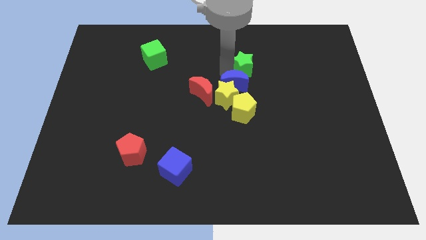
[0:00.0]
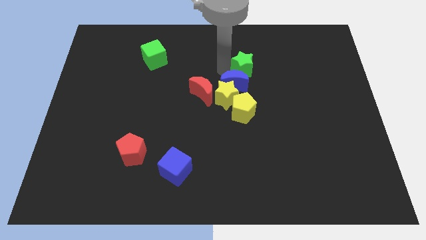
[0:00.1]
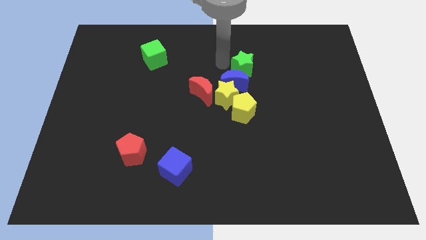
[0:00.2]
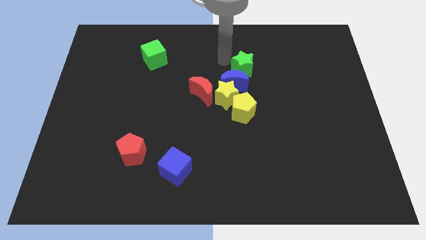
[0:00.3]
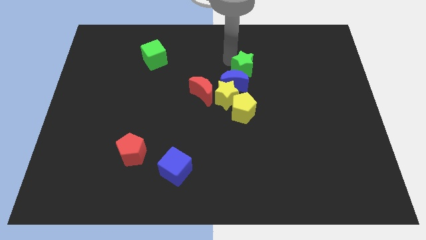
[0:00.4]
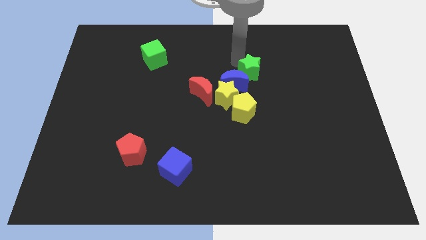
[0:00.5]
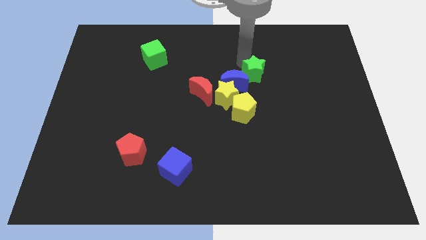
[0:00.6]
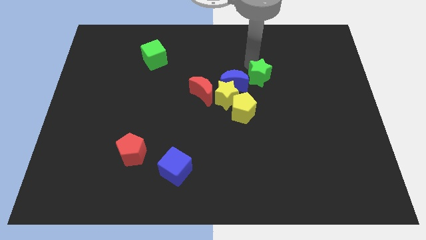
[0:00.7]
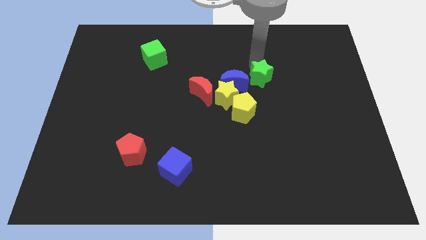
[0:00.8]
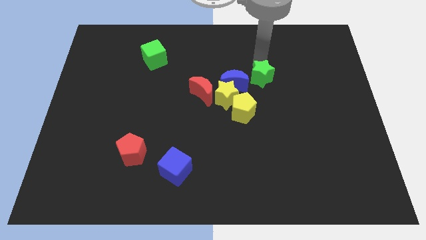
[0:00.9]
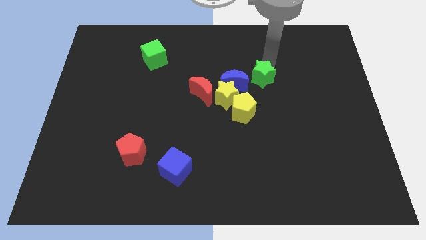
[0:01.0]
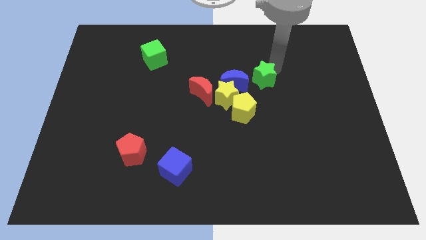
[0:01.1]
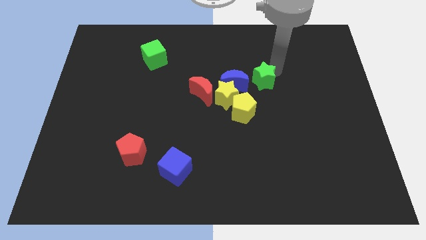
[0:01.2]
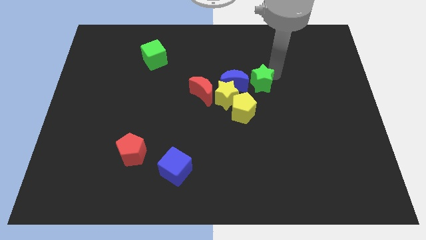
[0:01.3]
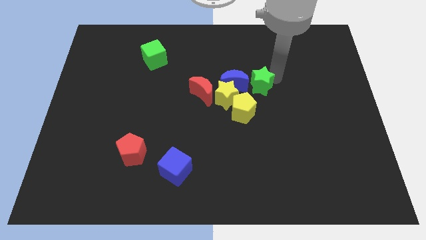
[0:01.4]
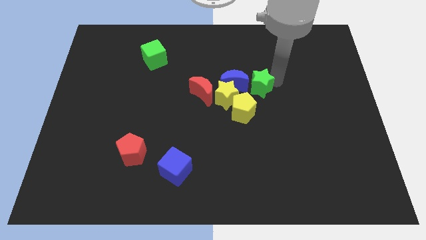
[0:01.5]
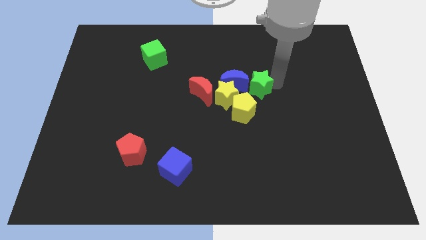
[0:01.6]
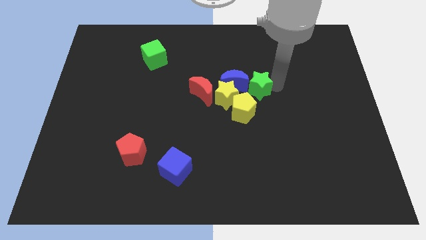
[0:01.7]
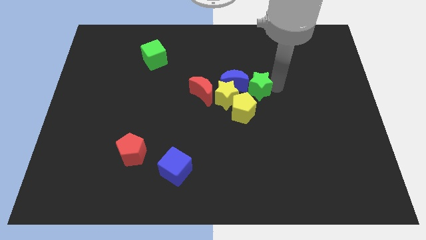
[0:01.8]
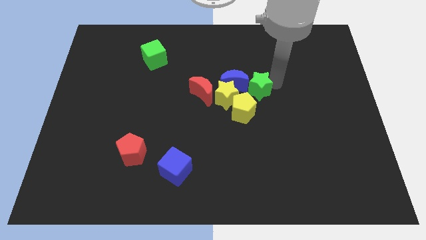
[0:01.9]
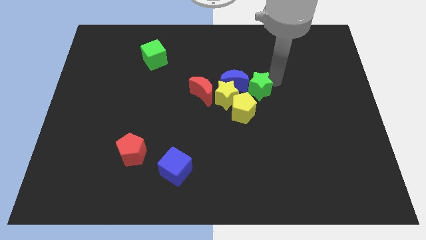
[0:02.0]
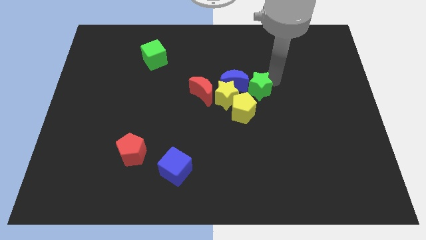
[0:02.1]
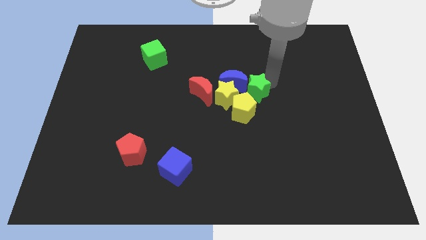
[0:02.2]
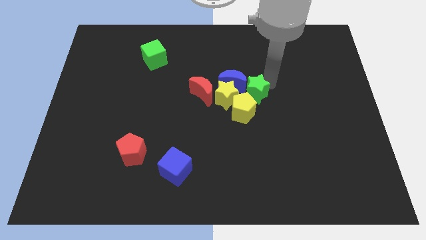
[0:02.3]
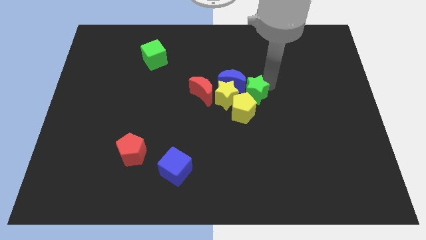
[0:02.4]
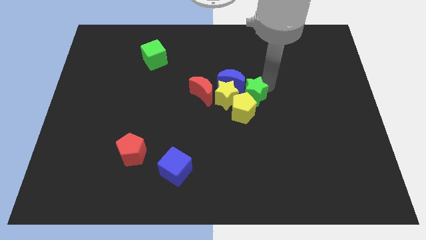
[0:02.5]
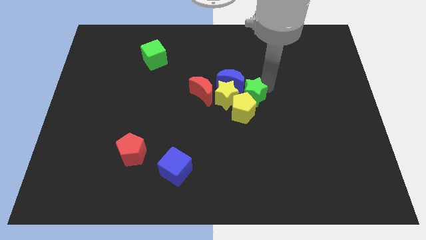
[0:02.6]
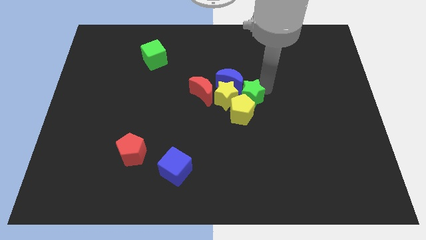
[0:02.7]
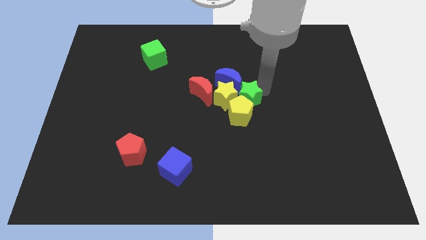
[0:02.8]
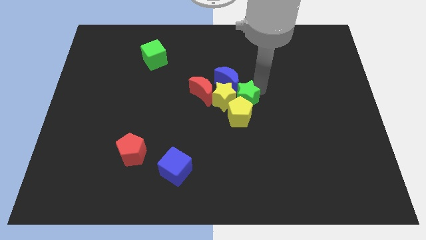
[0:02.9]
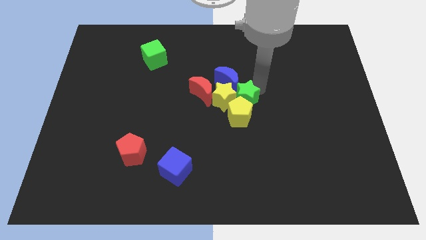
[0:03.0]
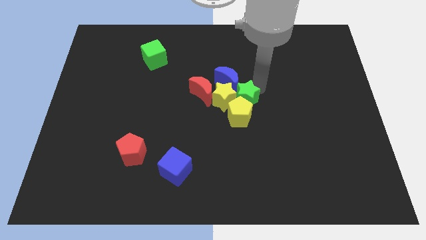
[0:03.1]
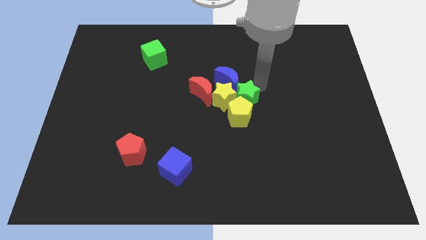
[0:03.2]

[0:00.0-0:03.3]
place green star to the right of the yellow star

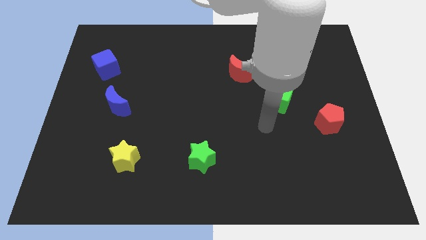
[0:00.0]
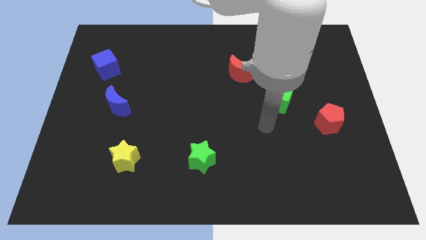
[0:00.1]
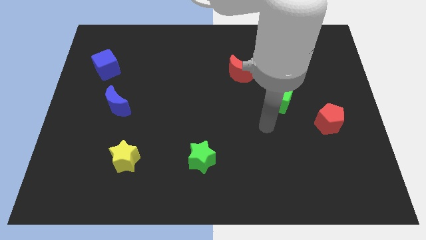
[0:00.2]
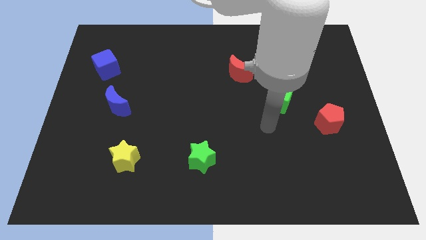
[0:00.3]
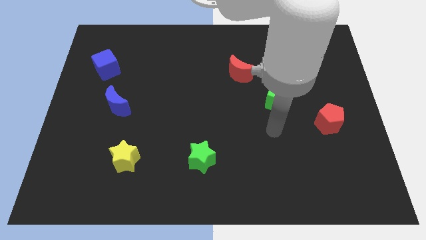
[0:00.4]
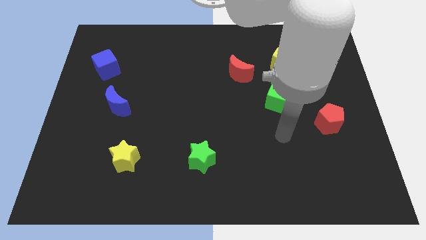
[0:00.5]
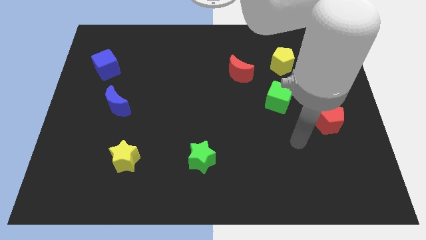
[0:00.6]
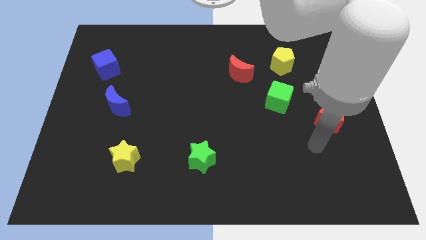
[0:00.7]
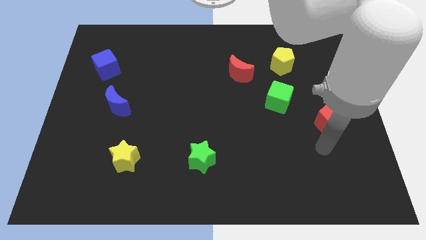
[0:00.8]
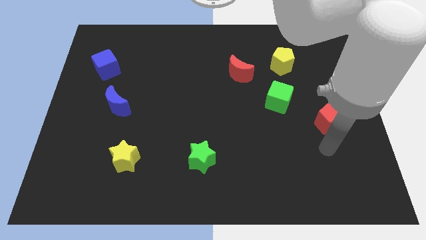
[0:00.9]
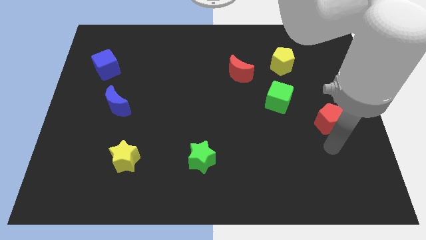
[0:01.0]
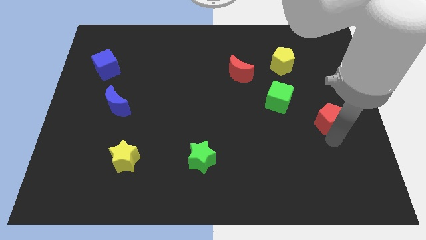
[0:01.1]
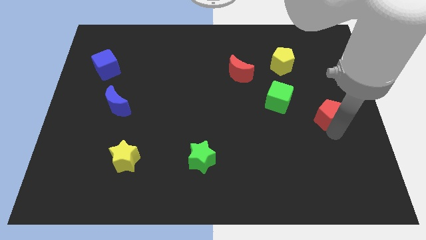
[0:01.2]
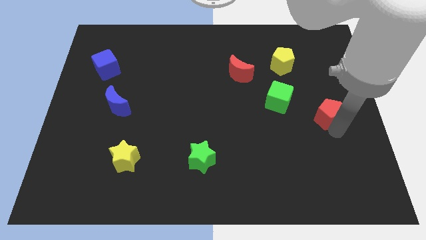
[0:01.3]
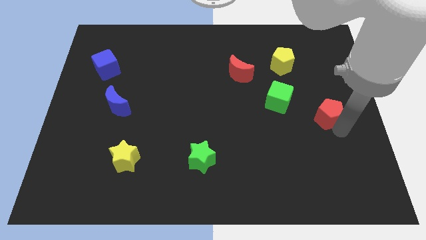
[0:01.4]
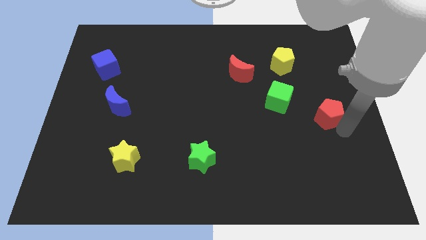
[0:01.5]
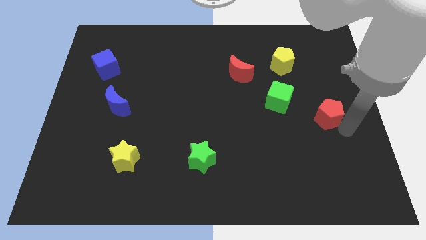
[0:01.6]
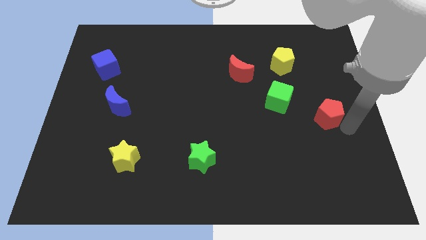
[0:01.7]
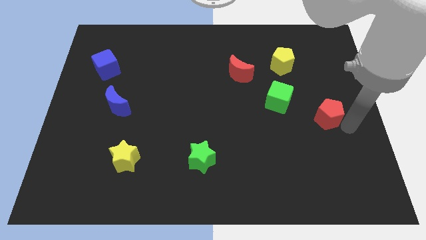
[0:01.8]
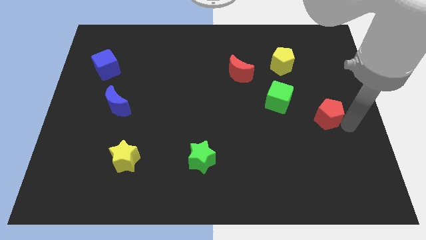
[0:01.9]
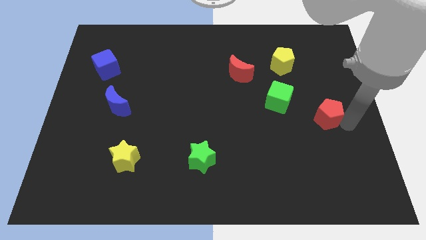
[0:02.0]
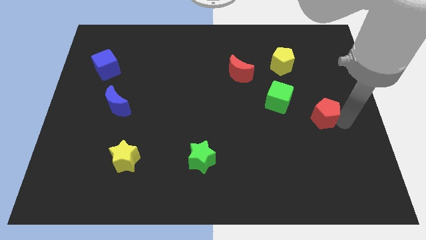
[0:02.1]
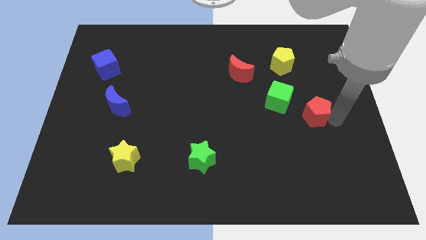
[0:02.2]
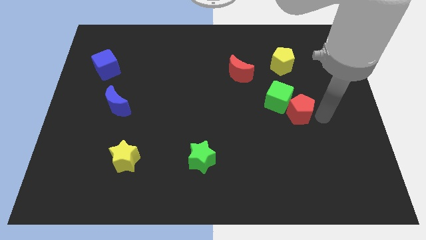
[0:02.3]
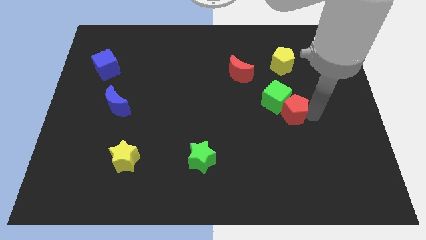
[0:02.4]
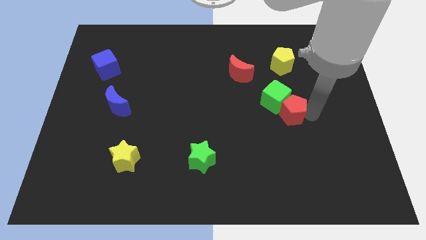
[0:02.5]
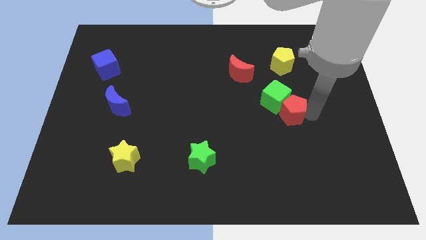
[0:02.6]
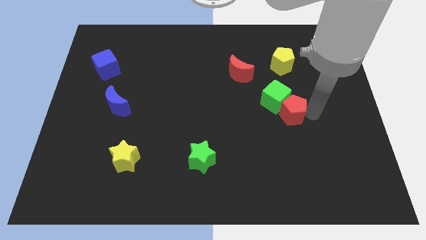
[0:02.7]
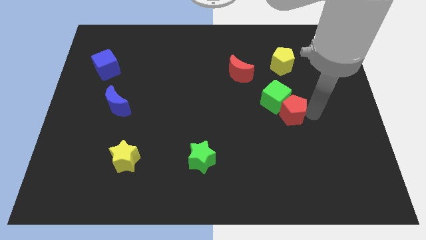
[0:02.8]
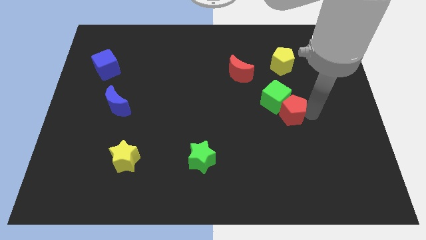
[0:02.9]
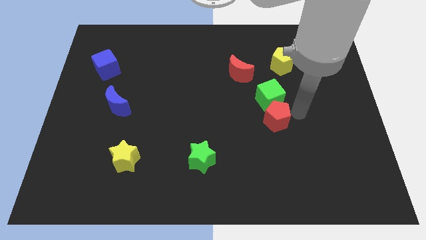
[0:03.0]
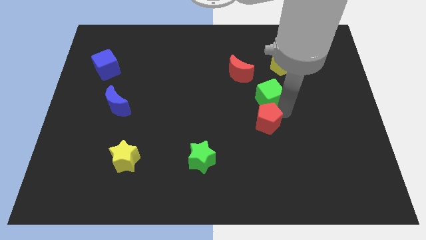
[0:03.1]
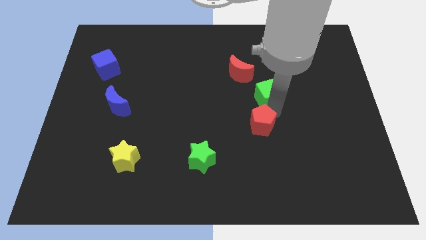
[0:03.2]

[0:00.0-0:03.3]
place the red pentagon below the green cube

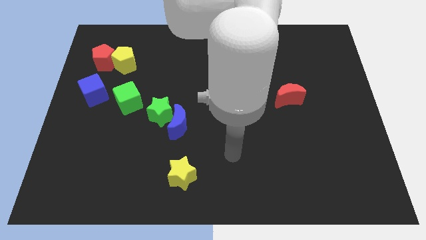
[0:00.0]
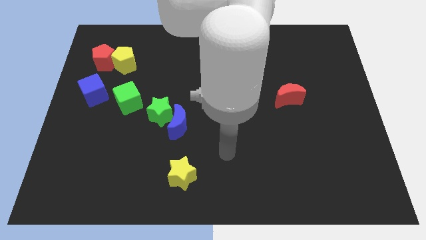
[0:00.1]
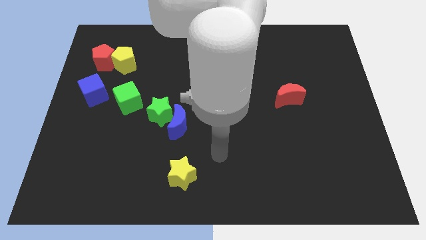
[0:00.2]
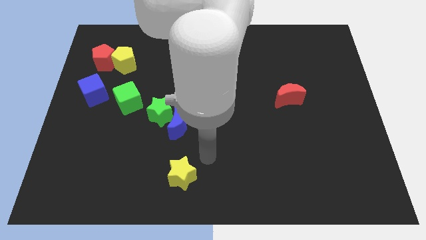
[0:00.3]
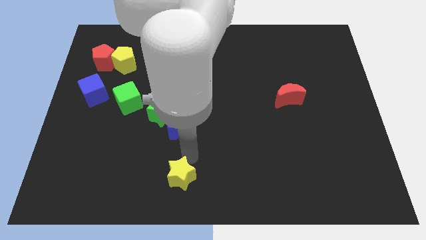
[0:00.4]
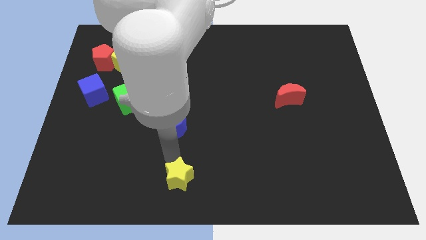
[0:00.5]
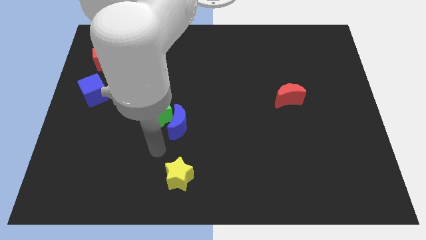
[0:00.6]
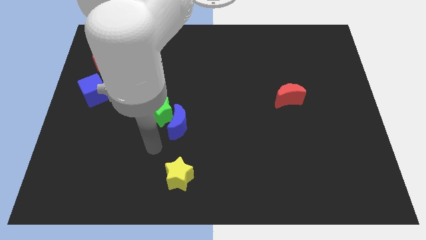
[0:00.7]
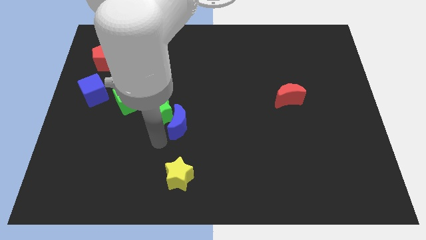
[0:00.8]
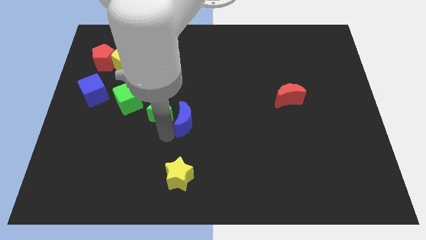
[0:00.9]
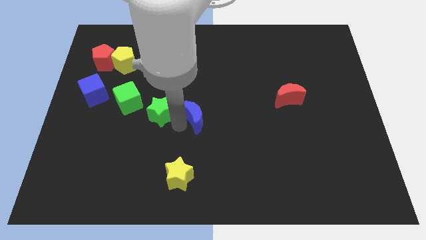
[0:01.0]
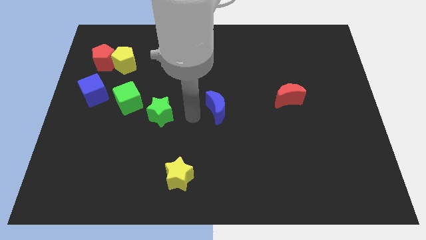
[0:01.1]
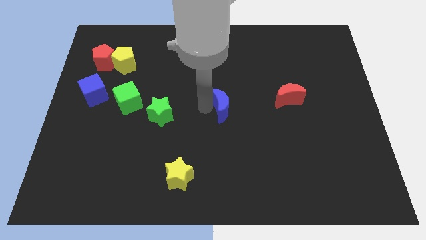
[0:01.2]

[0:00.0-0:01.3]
slightly touch on the top of the yellow star

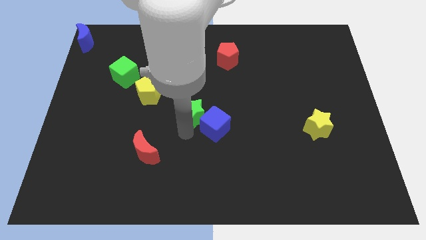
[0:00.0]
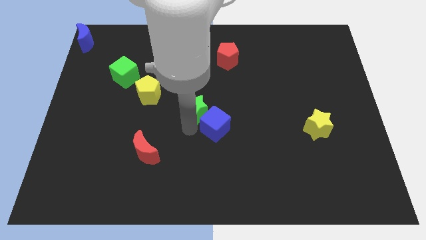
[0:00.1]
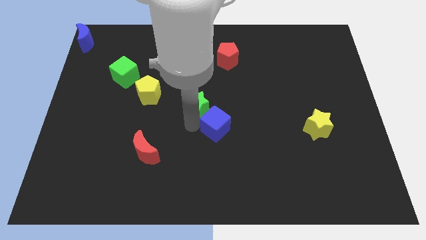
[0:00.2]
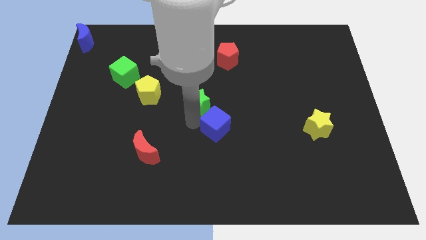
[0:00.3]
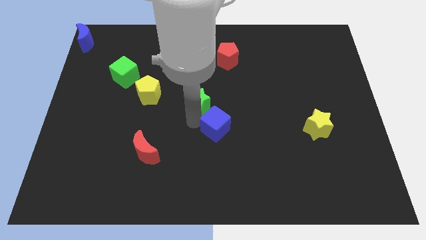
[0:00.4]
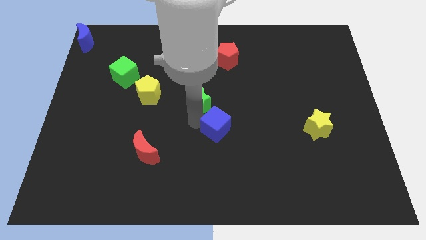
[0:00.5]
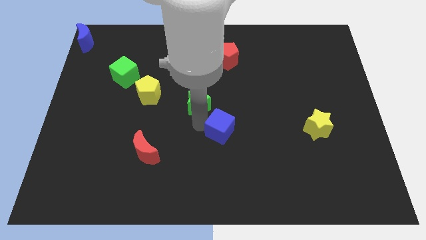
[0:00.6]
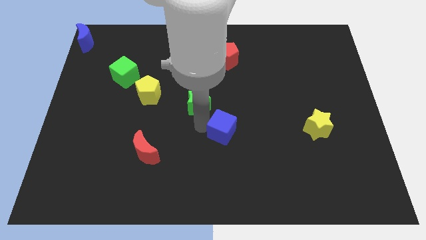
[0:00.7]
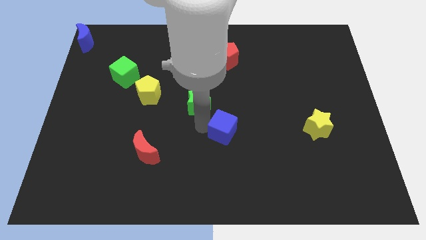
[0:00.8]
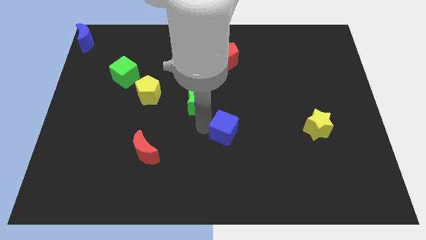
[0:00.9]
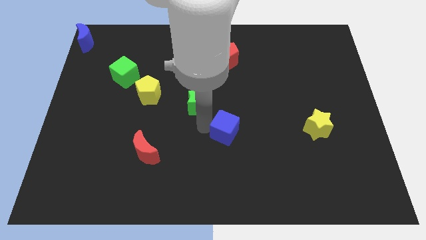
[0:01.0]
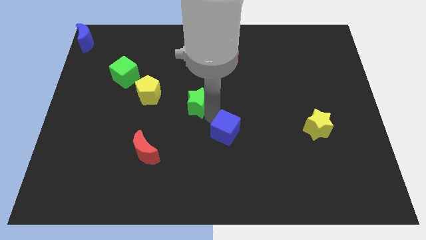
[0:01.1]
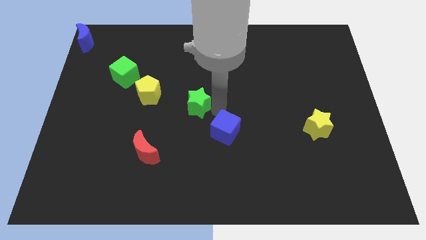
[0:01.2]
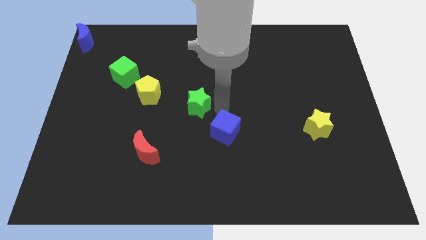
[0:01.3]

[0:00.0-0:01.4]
separate the green star and blue cube
